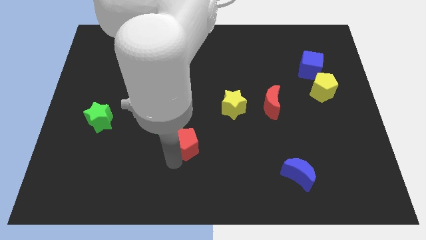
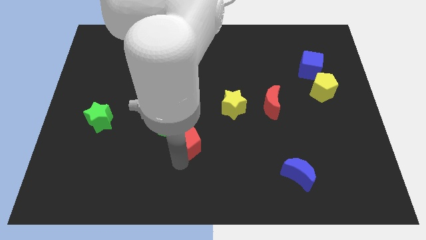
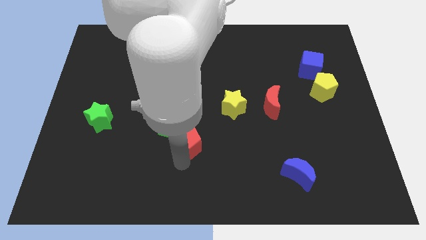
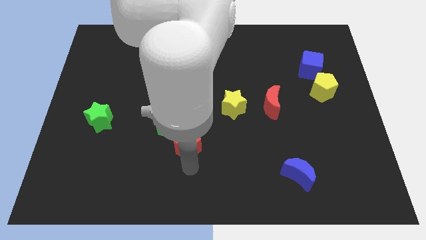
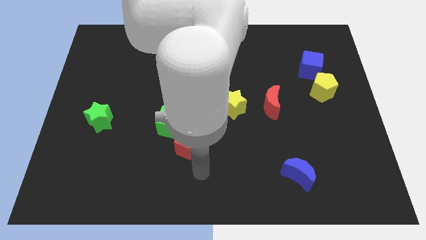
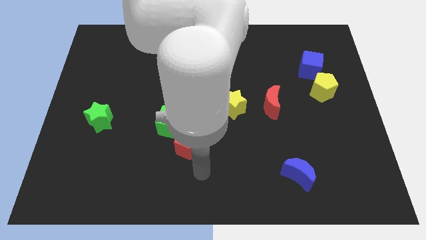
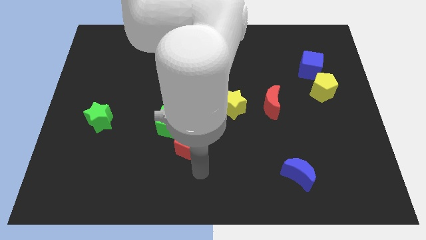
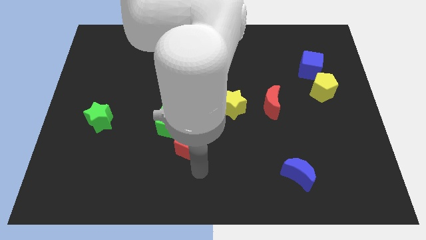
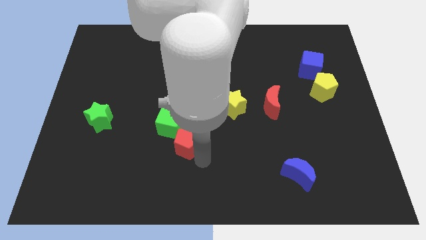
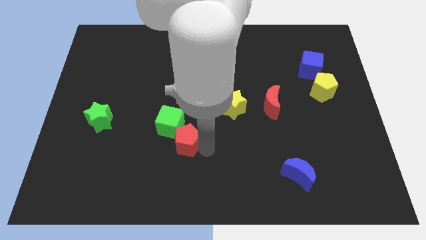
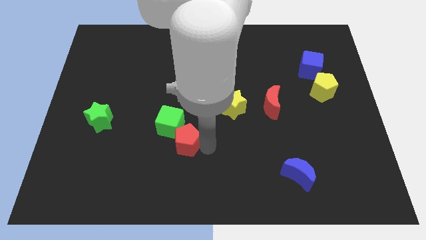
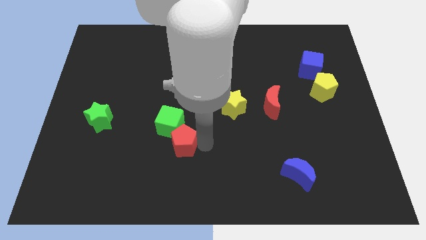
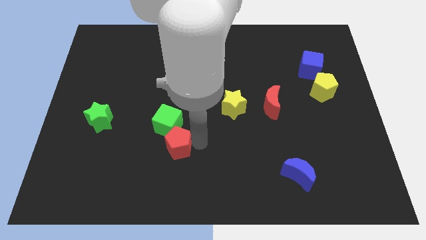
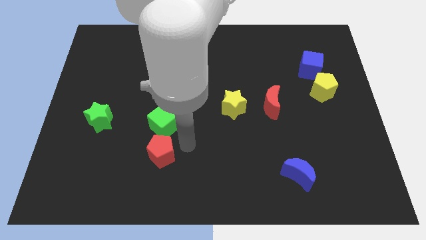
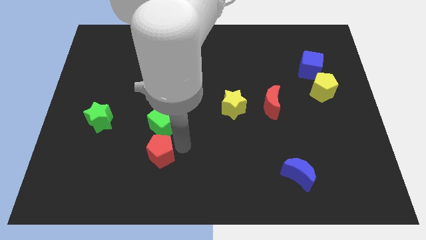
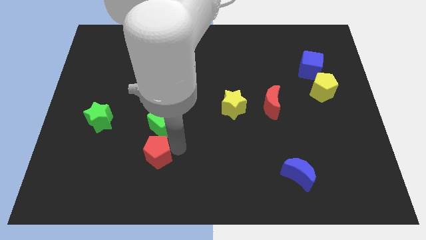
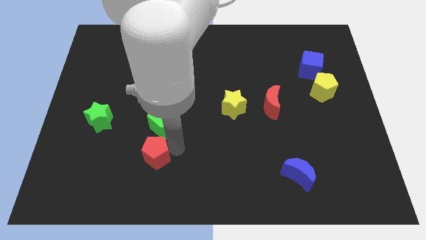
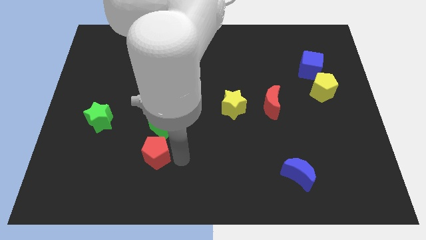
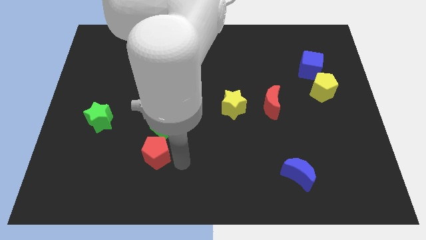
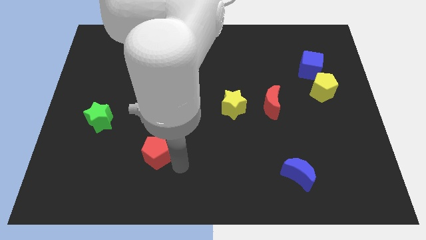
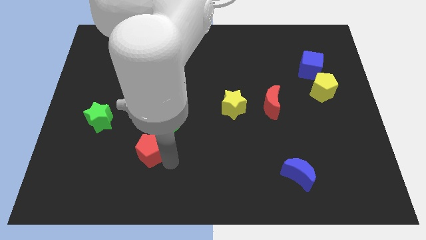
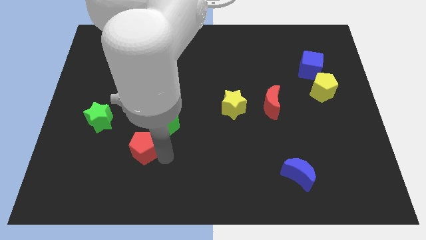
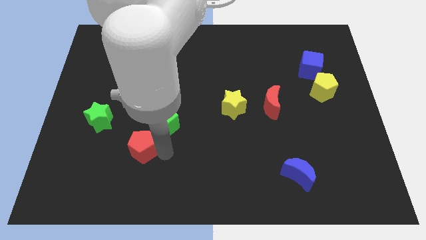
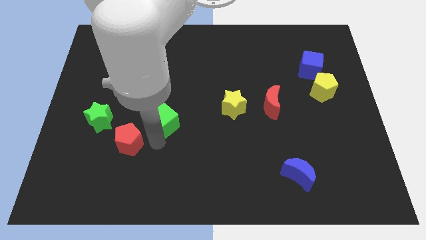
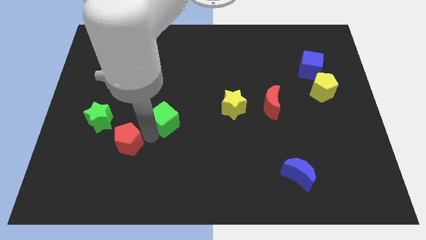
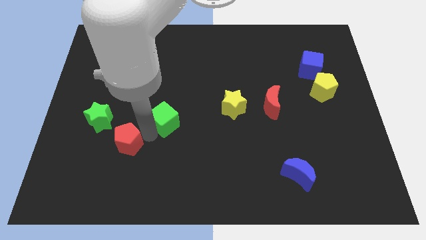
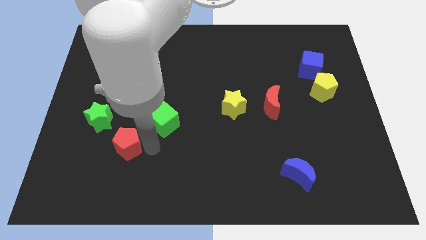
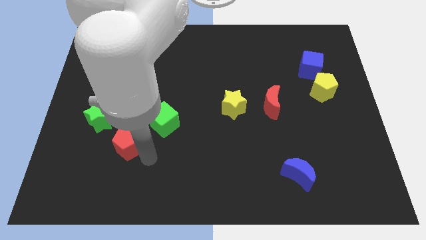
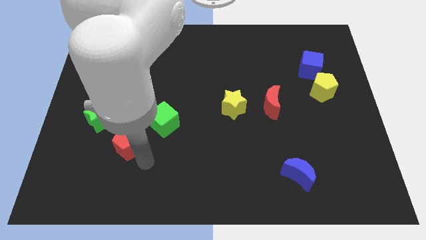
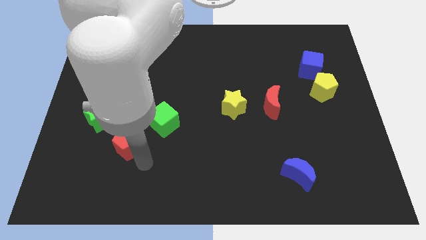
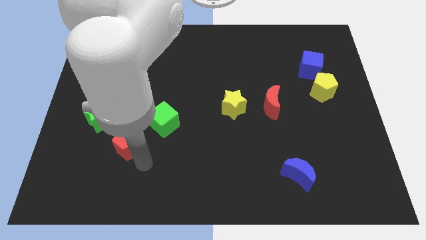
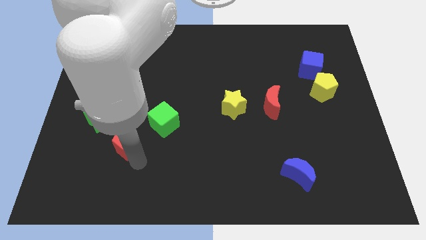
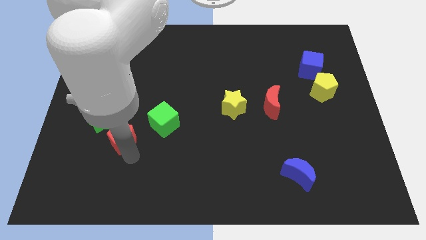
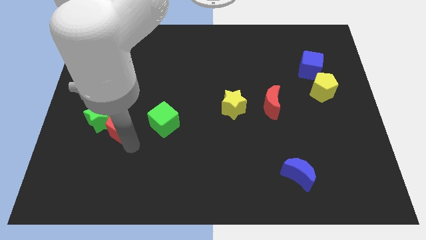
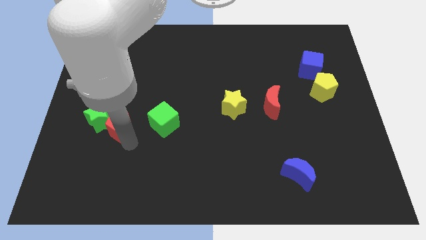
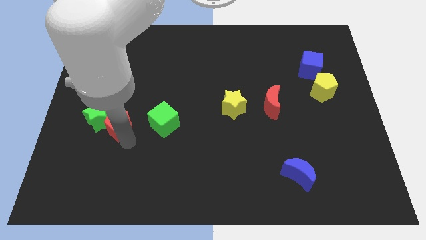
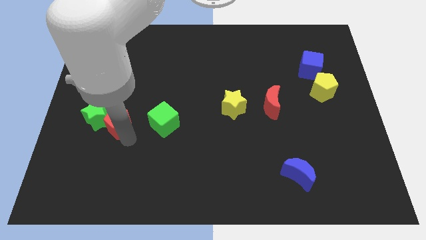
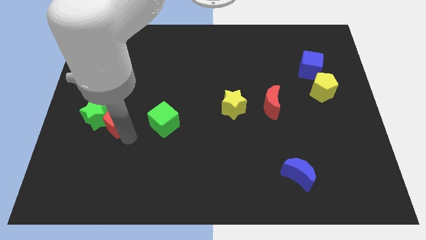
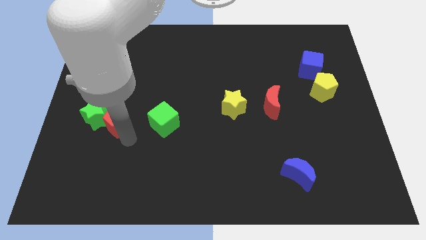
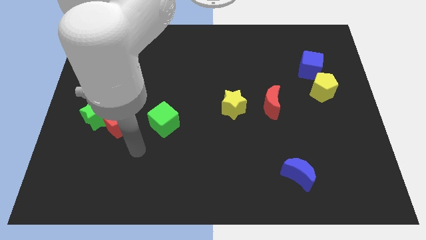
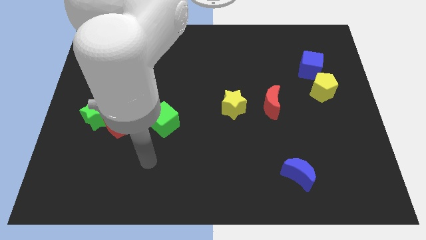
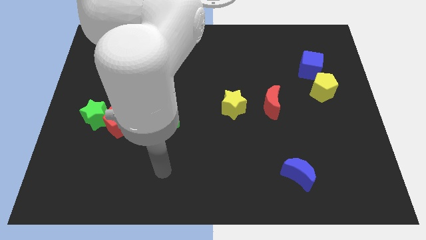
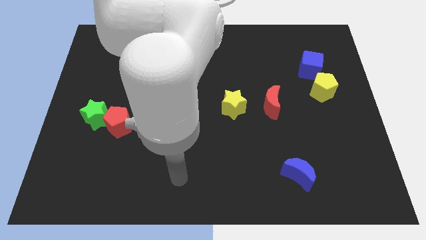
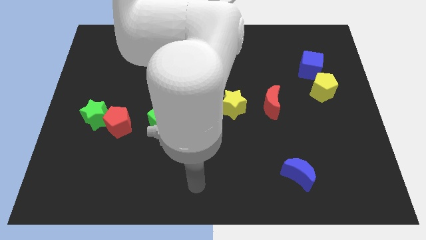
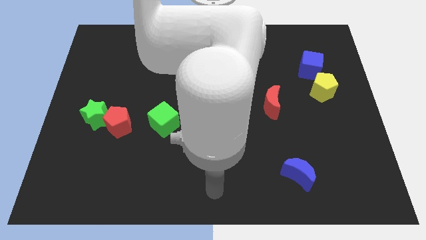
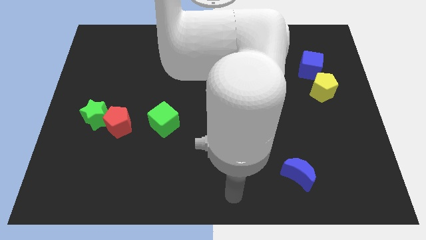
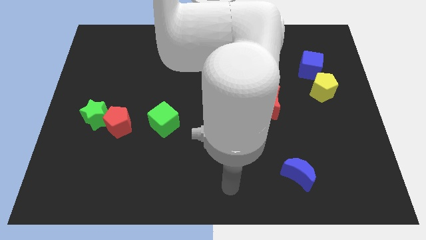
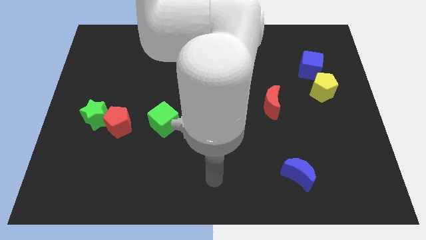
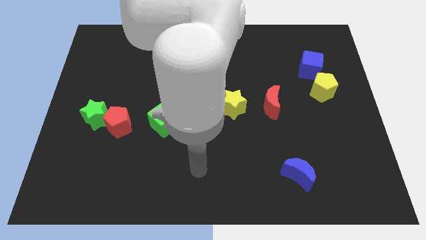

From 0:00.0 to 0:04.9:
push the red pentagon to the diagonal right side of the green star

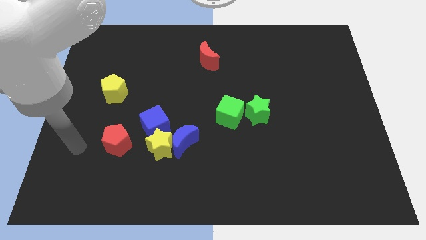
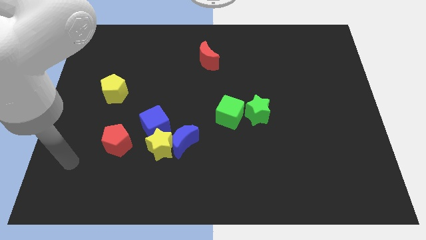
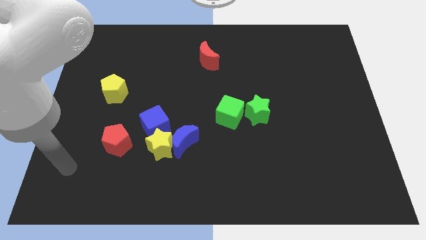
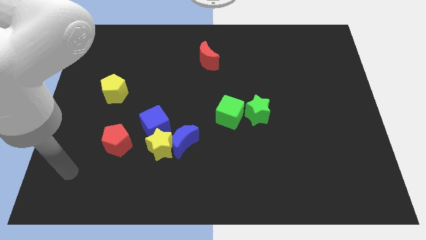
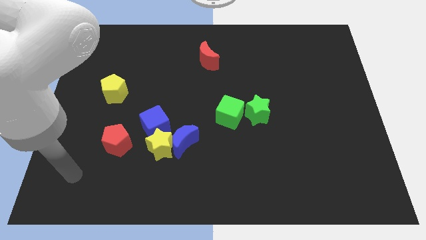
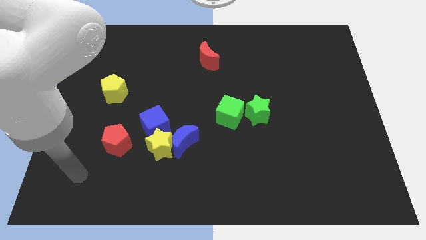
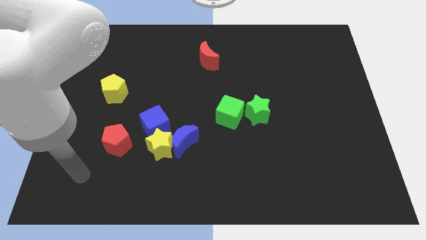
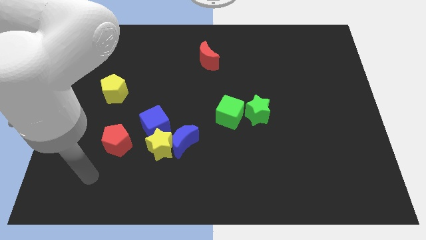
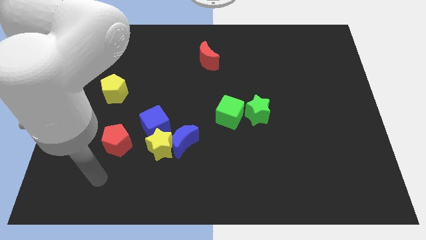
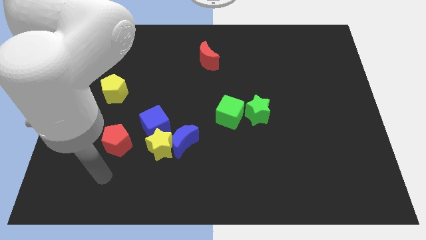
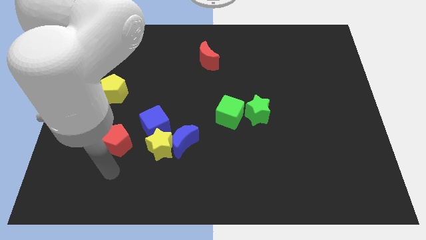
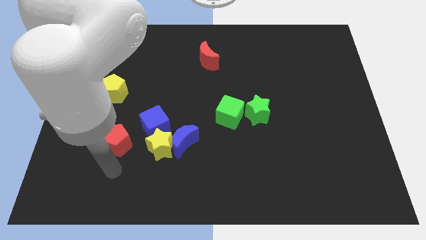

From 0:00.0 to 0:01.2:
move the arm below the red pentagon

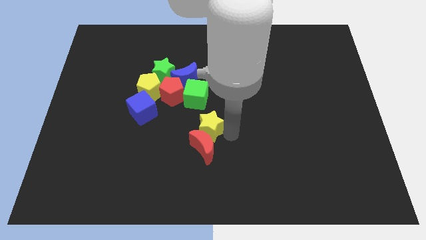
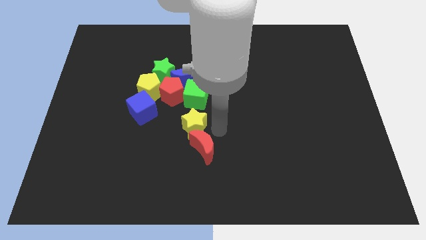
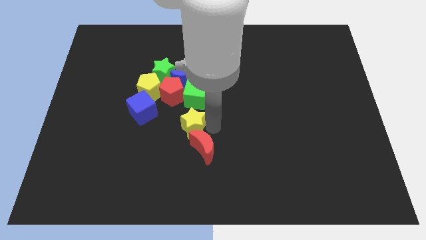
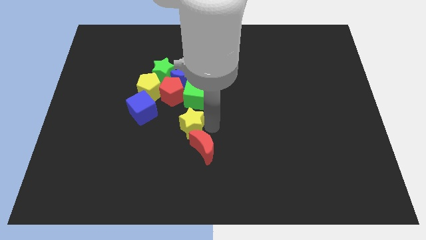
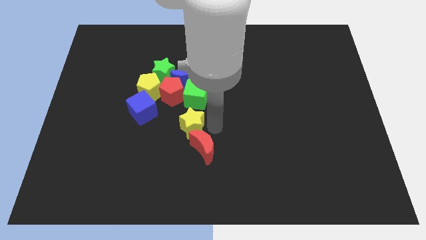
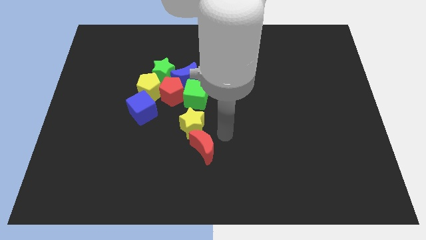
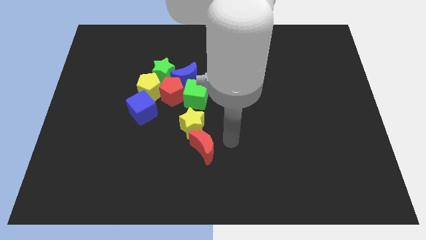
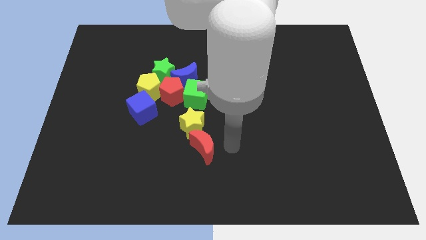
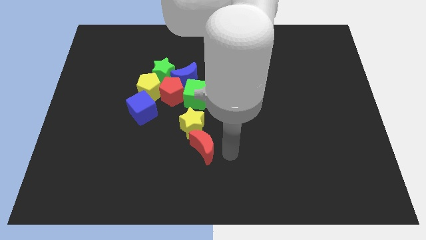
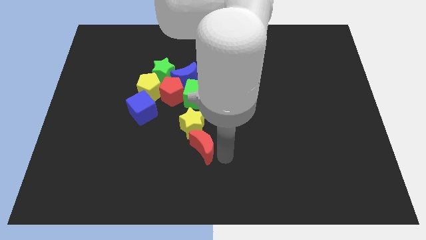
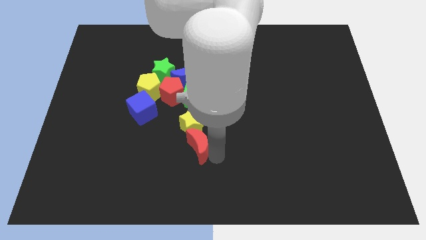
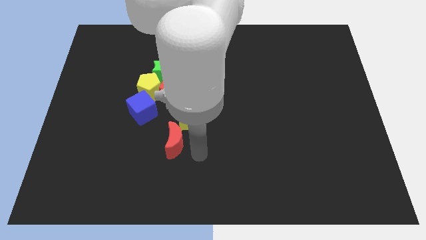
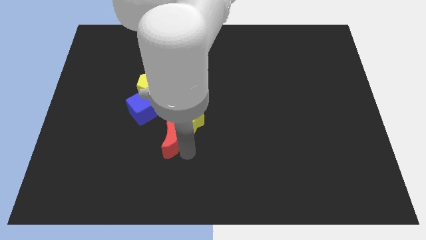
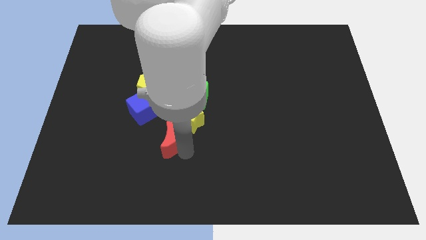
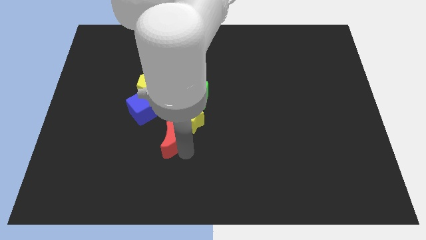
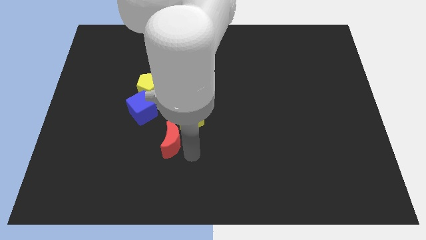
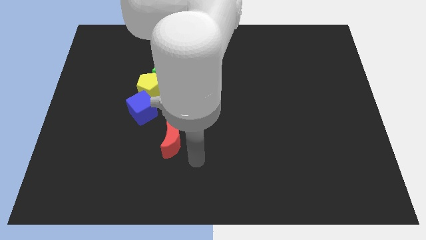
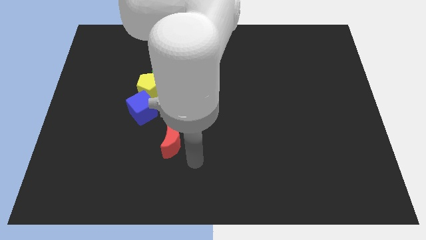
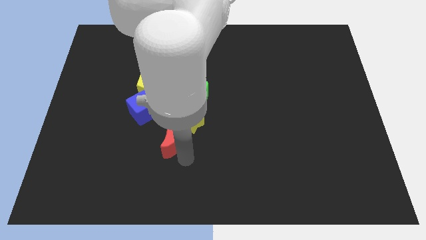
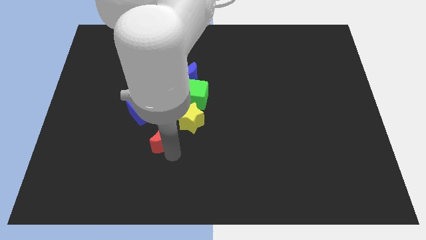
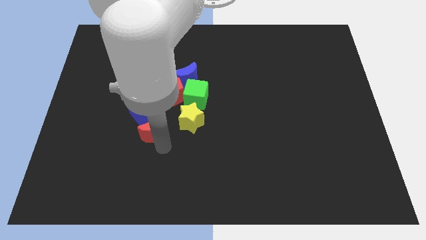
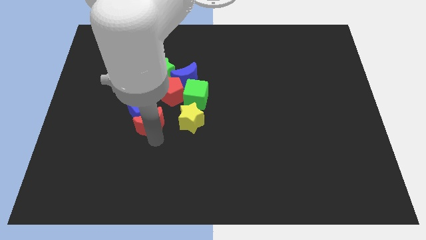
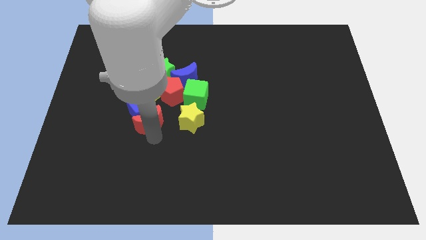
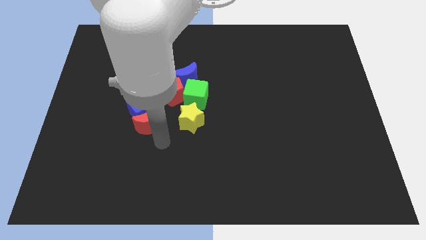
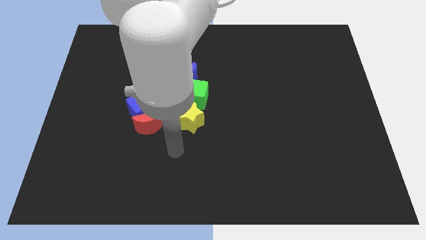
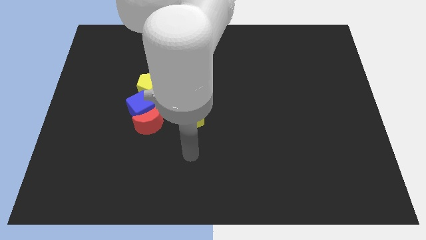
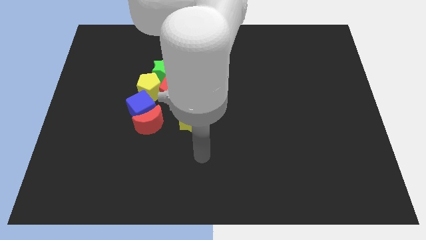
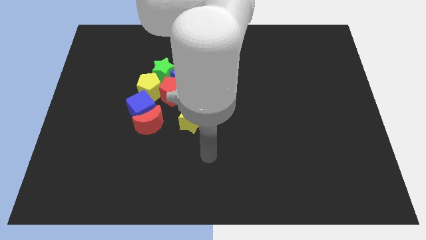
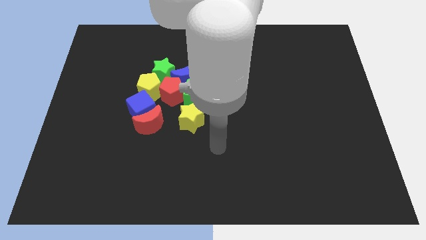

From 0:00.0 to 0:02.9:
move the red crescent to the bottom of the blue cube
